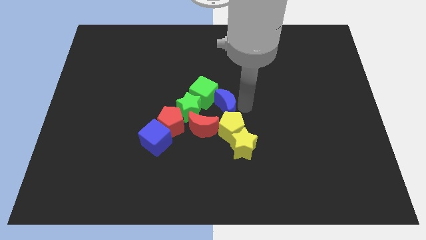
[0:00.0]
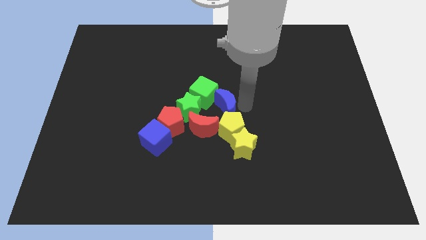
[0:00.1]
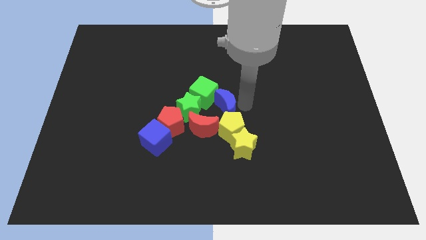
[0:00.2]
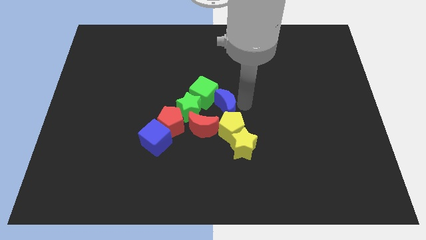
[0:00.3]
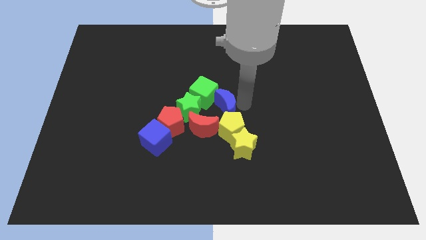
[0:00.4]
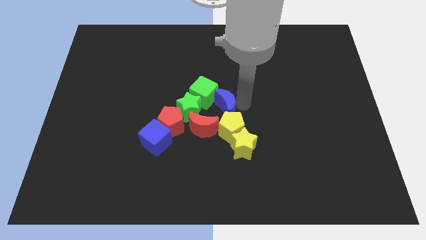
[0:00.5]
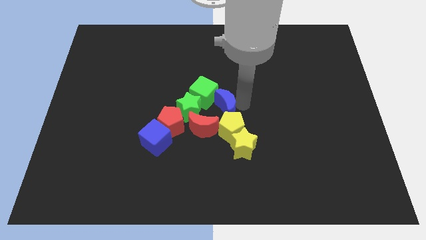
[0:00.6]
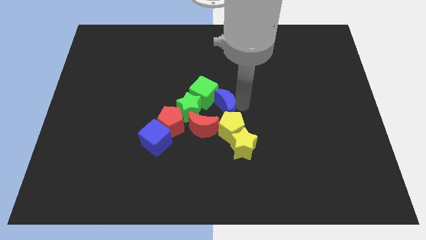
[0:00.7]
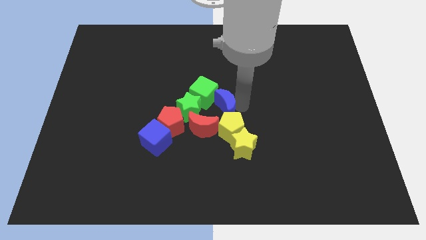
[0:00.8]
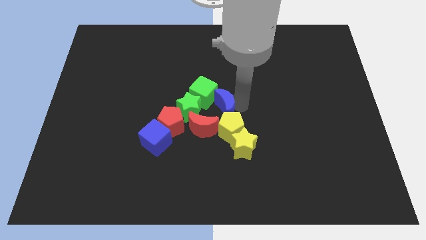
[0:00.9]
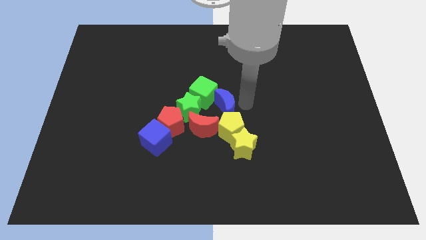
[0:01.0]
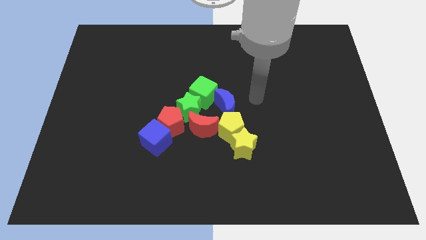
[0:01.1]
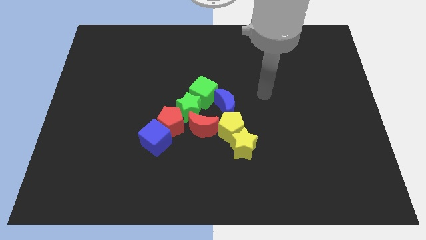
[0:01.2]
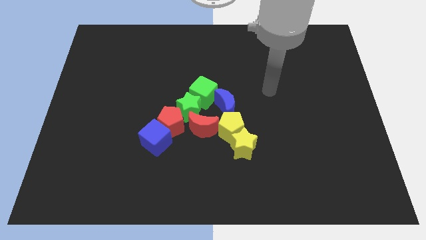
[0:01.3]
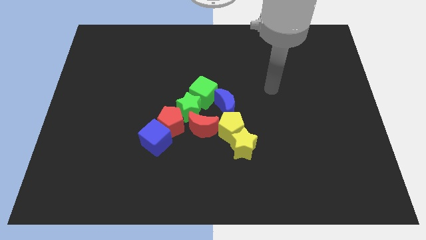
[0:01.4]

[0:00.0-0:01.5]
move your arm away from the blue moon

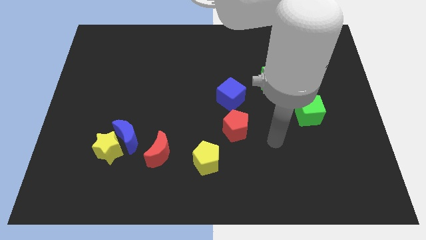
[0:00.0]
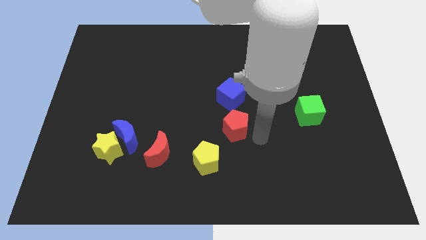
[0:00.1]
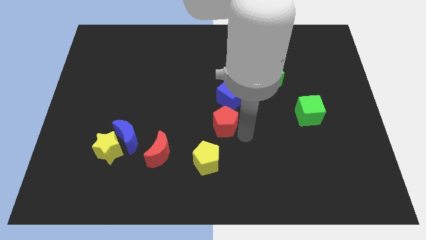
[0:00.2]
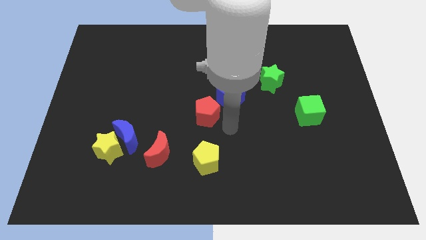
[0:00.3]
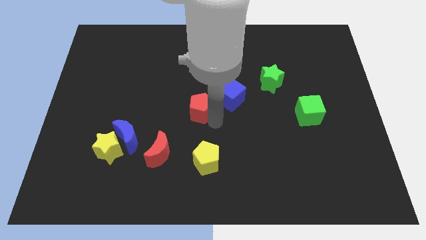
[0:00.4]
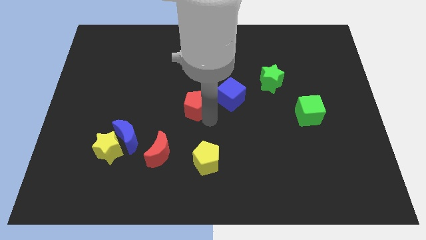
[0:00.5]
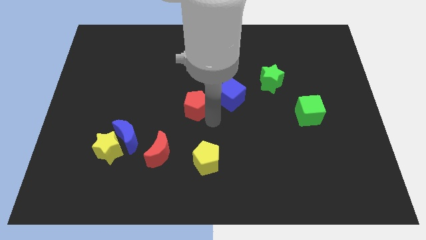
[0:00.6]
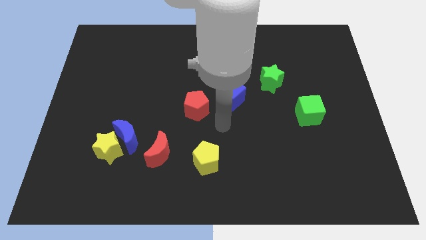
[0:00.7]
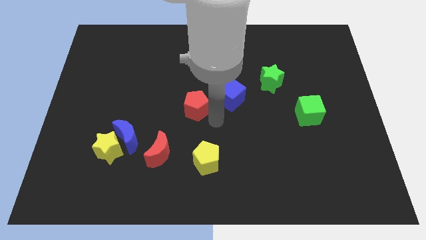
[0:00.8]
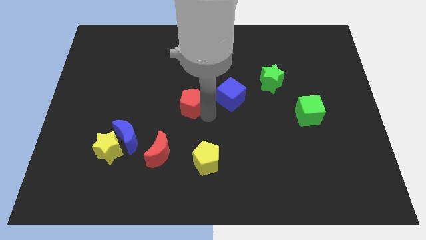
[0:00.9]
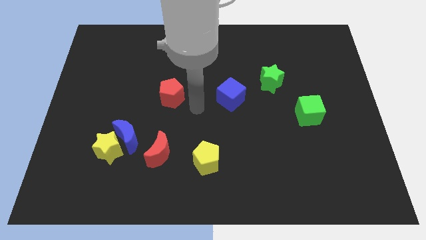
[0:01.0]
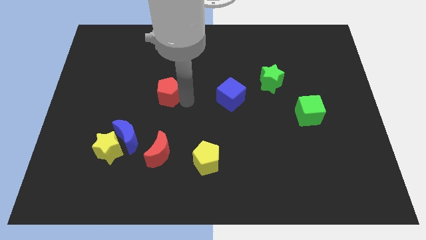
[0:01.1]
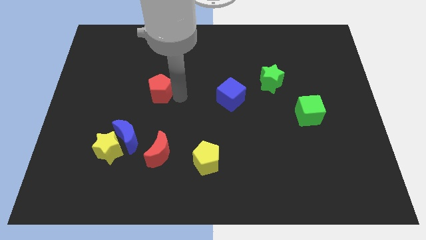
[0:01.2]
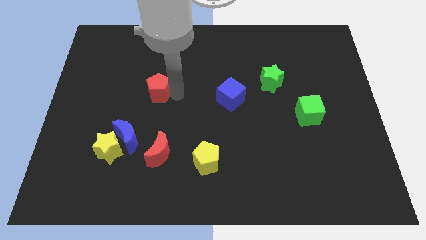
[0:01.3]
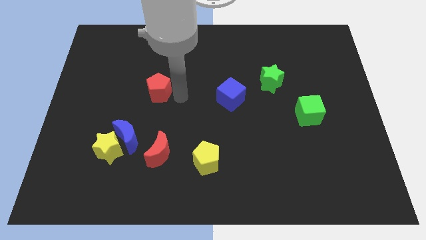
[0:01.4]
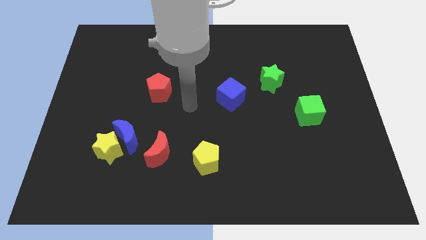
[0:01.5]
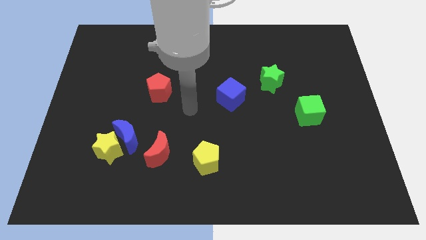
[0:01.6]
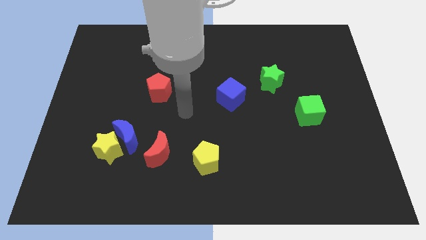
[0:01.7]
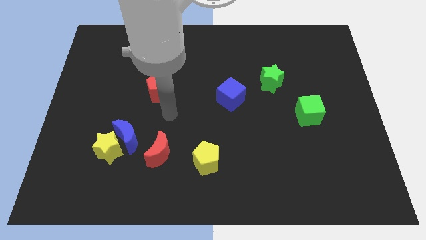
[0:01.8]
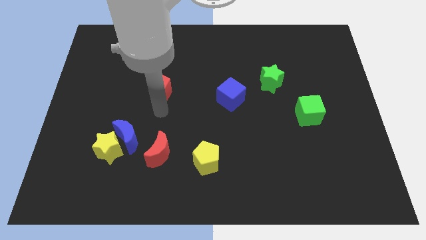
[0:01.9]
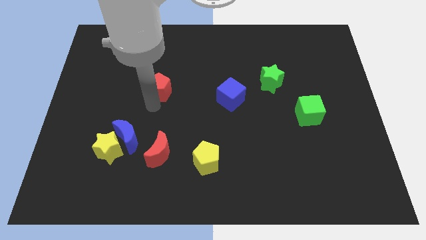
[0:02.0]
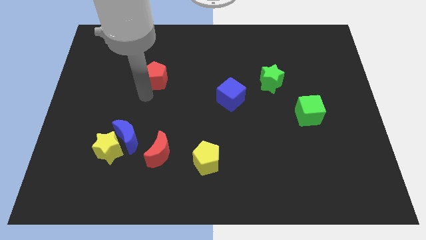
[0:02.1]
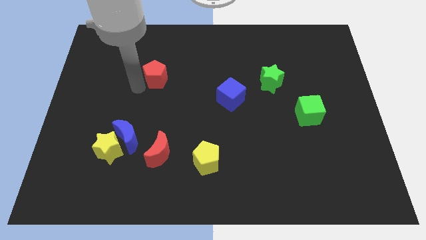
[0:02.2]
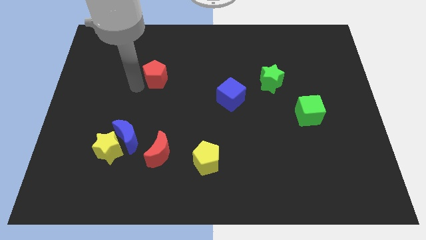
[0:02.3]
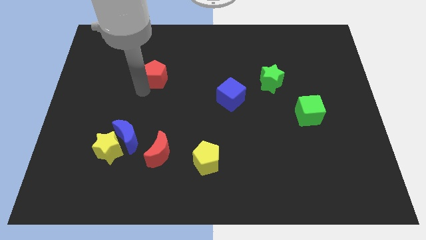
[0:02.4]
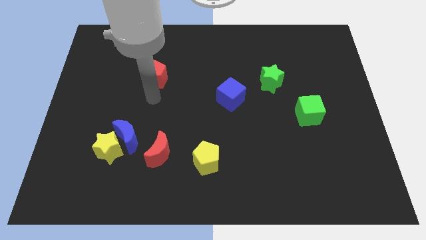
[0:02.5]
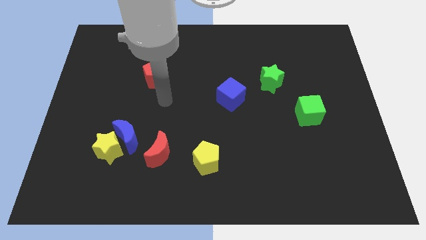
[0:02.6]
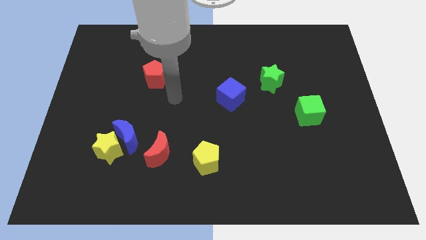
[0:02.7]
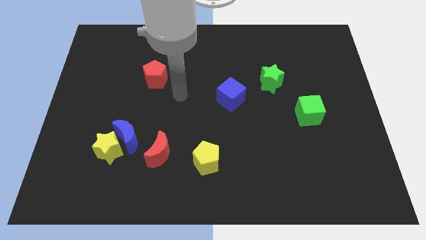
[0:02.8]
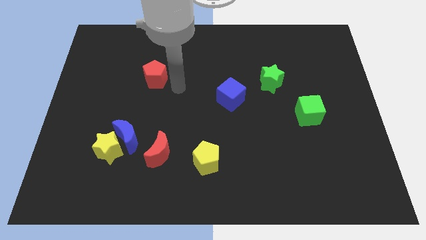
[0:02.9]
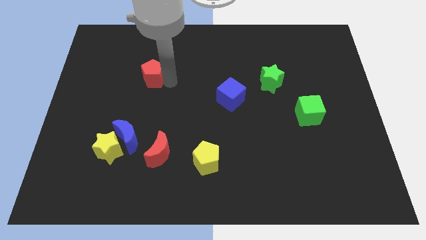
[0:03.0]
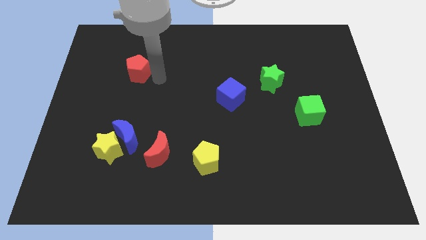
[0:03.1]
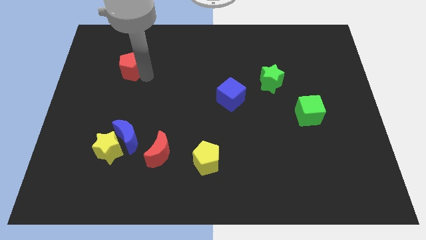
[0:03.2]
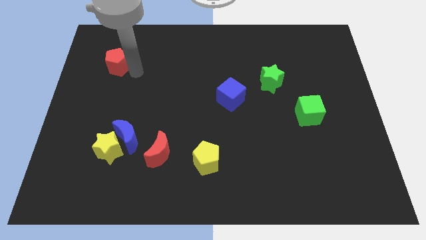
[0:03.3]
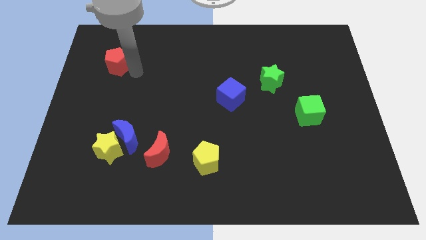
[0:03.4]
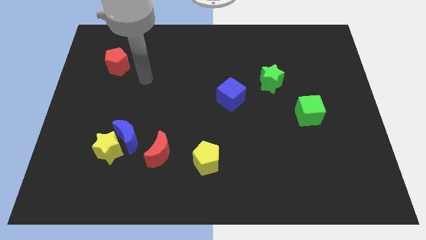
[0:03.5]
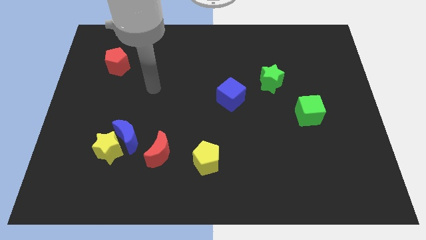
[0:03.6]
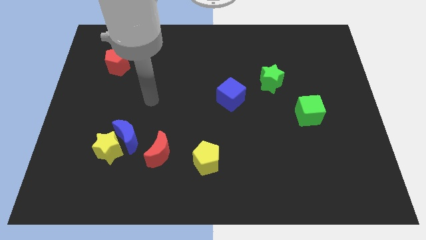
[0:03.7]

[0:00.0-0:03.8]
place the red pentagon vertically above the blue crescent

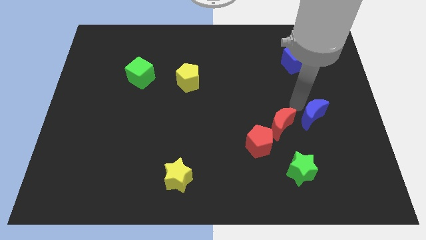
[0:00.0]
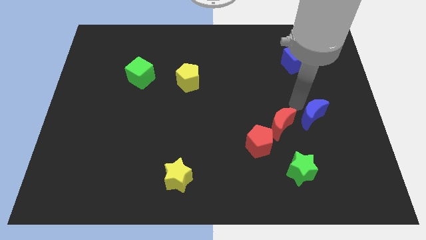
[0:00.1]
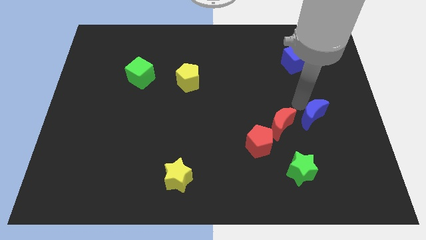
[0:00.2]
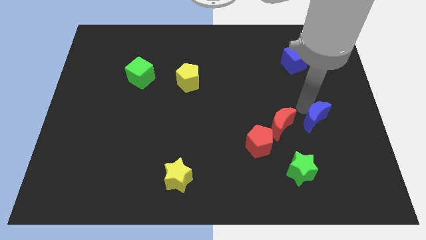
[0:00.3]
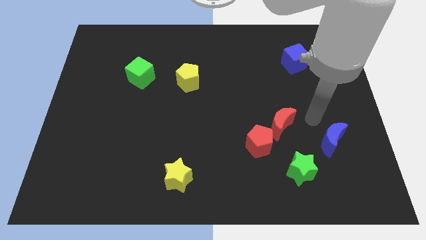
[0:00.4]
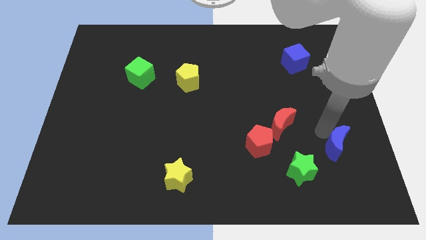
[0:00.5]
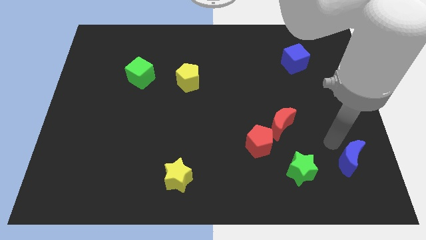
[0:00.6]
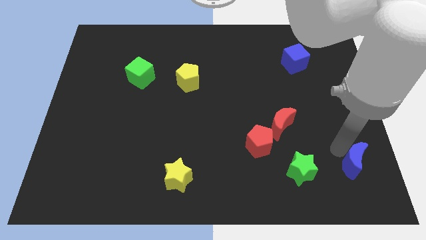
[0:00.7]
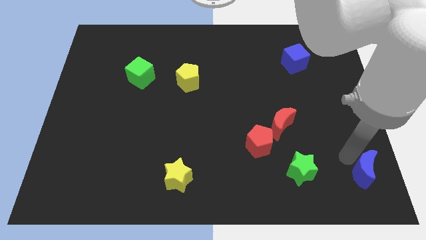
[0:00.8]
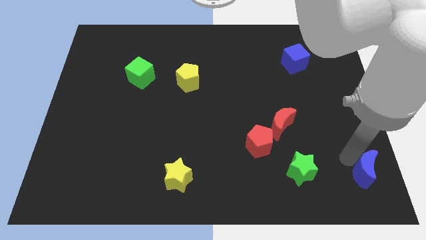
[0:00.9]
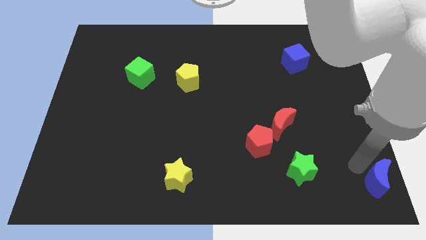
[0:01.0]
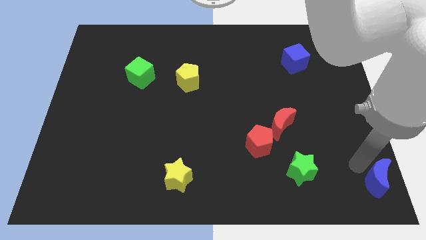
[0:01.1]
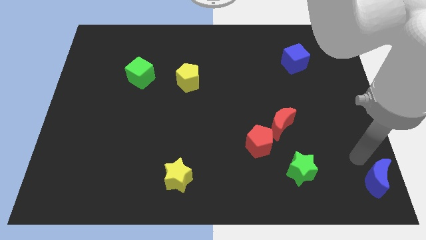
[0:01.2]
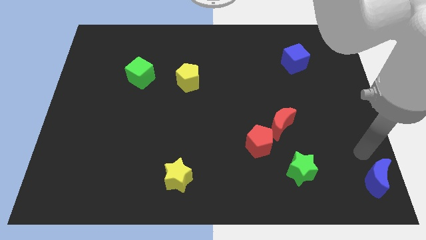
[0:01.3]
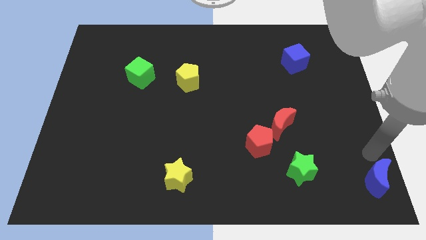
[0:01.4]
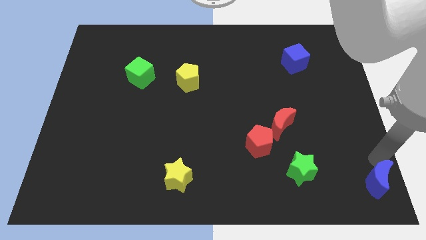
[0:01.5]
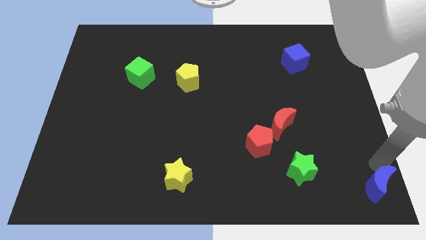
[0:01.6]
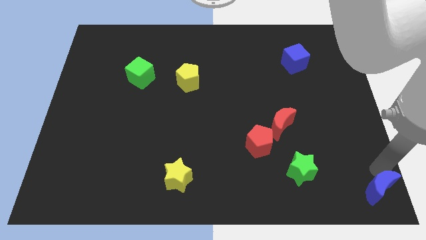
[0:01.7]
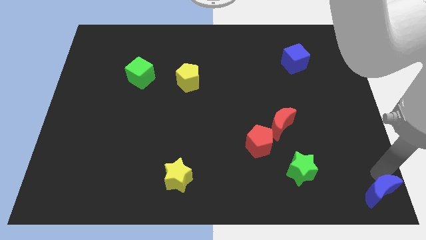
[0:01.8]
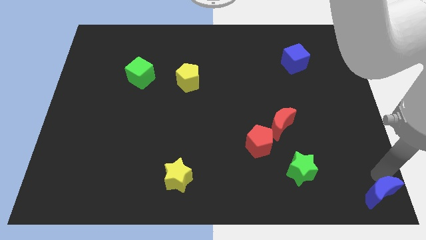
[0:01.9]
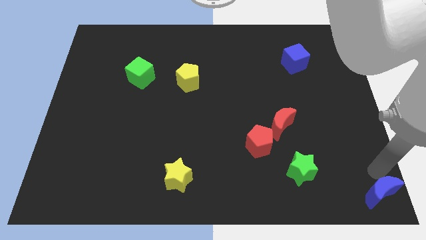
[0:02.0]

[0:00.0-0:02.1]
push the blue crescent to the bottom right corner of the board

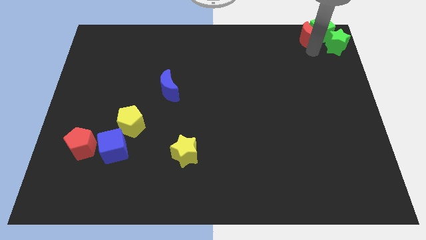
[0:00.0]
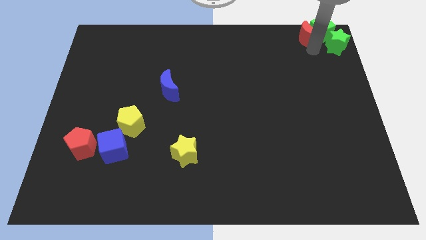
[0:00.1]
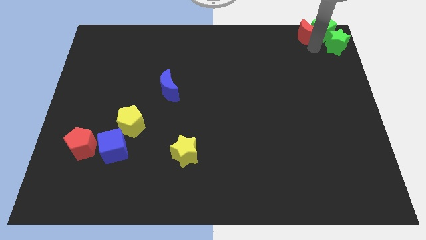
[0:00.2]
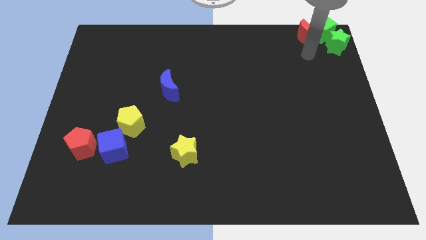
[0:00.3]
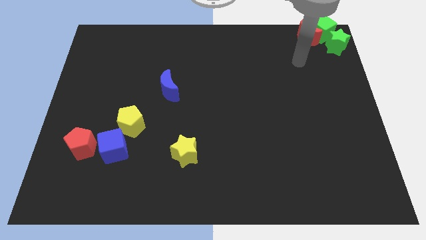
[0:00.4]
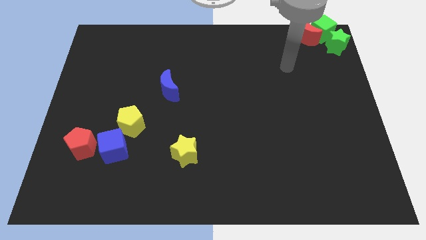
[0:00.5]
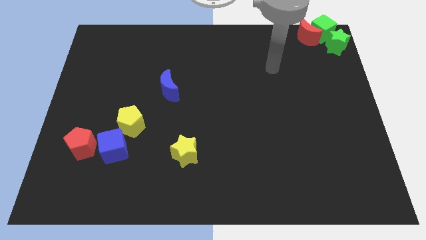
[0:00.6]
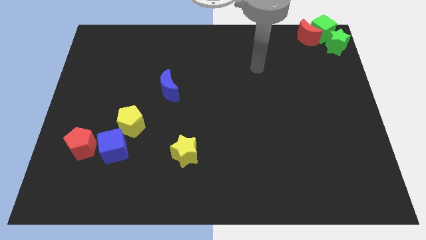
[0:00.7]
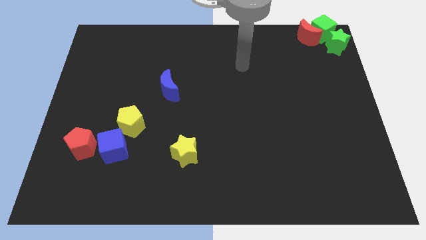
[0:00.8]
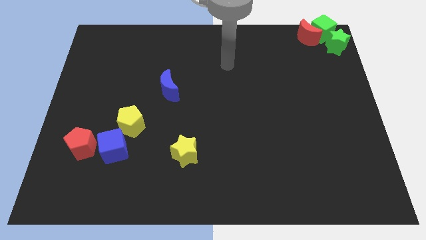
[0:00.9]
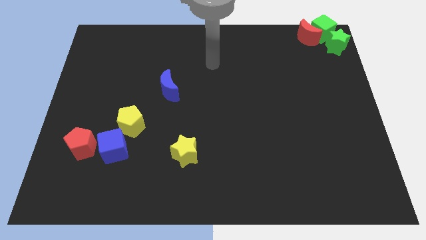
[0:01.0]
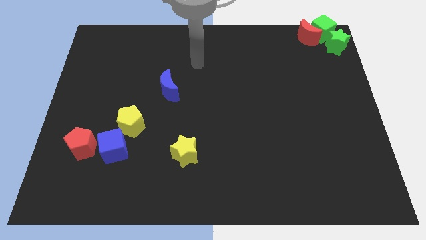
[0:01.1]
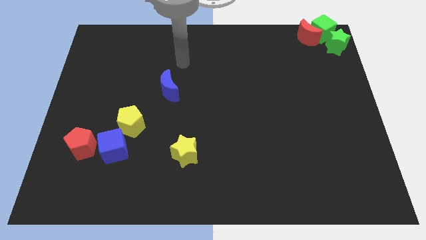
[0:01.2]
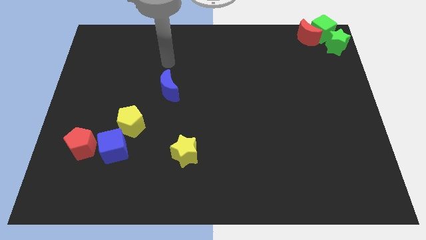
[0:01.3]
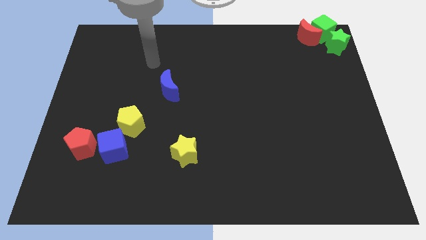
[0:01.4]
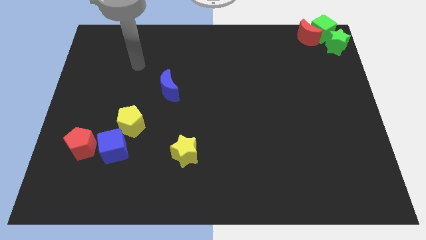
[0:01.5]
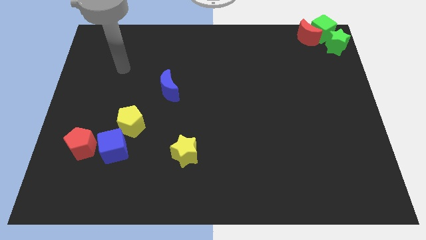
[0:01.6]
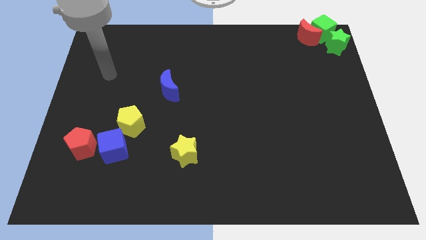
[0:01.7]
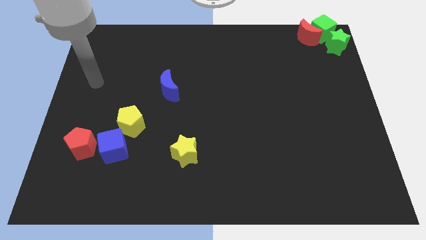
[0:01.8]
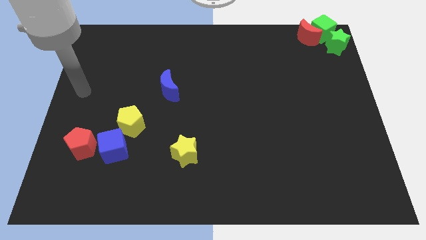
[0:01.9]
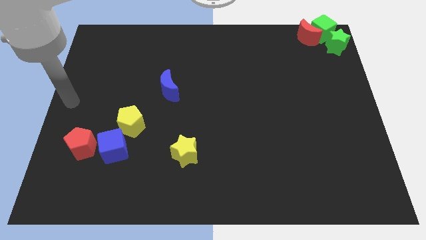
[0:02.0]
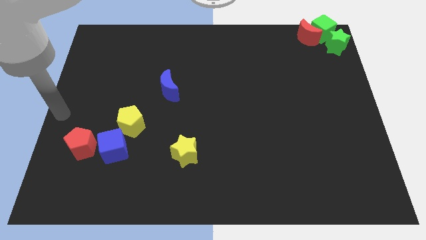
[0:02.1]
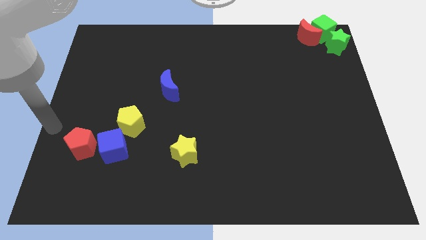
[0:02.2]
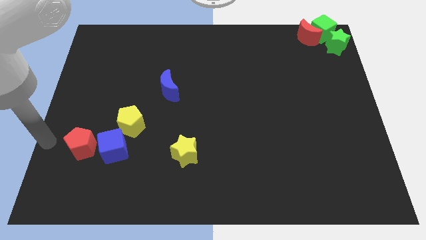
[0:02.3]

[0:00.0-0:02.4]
move your arm left to the red pentagon
